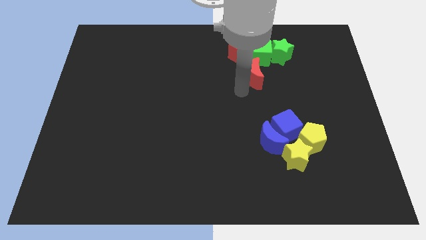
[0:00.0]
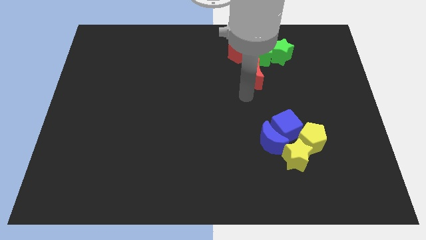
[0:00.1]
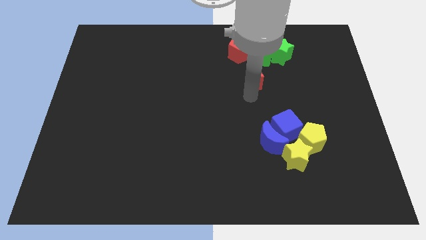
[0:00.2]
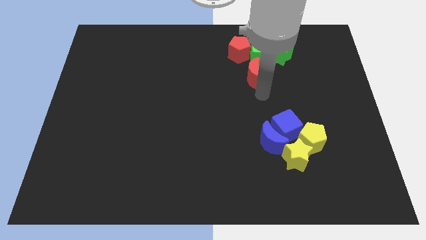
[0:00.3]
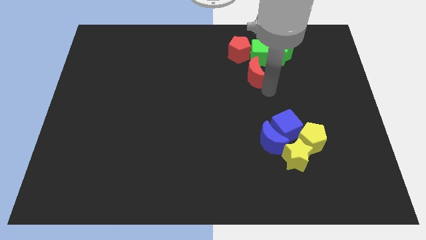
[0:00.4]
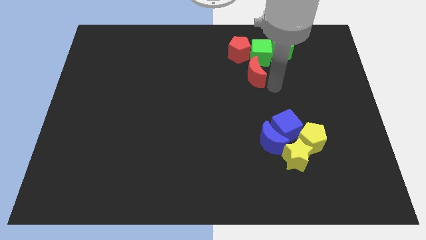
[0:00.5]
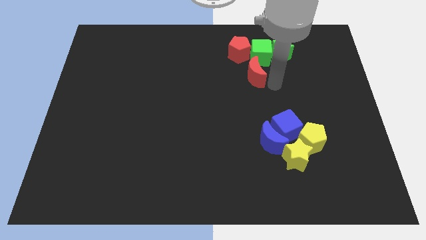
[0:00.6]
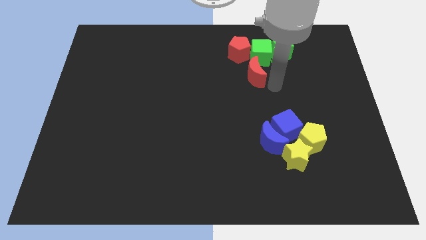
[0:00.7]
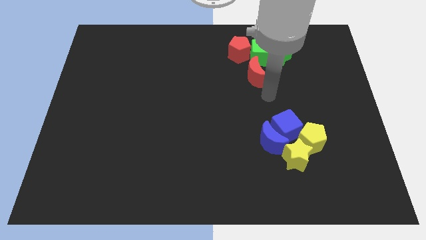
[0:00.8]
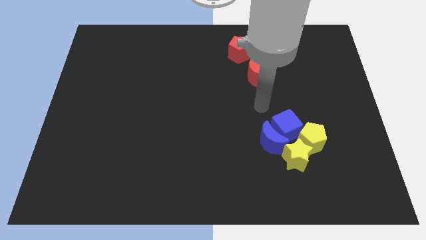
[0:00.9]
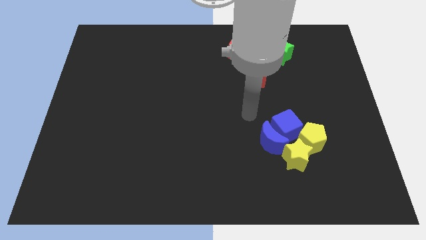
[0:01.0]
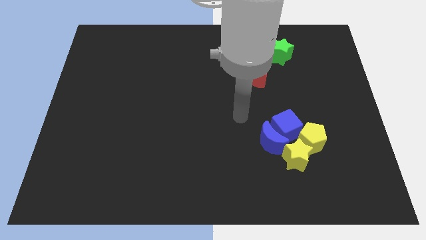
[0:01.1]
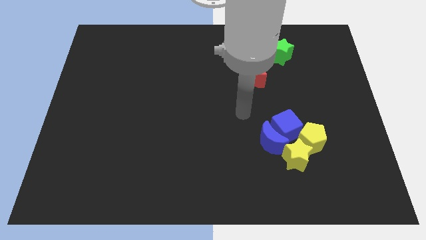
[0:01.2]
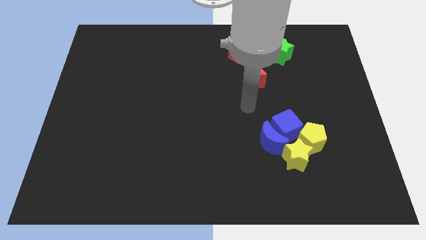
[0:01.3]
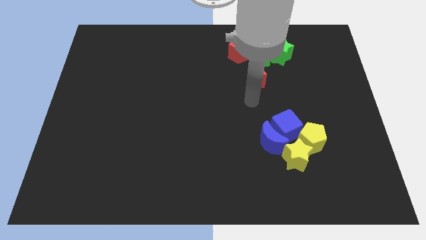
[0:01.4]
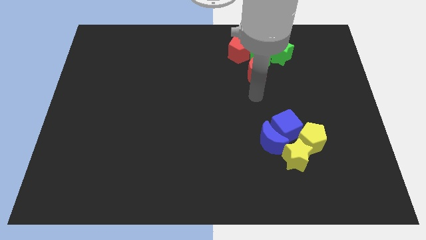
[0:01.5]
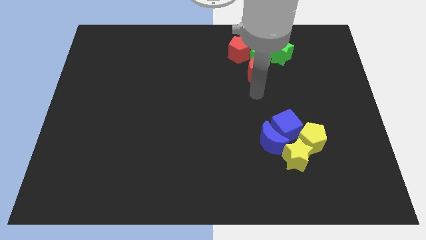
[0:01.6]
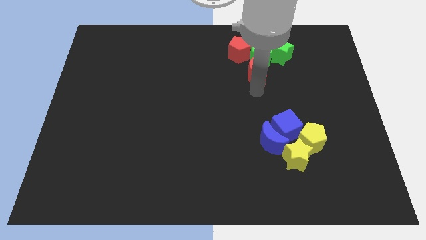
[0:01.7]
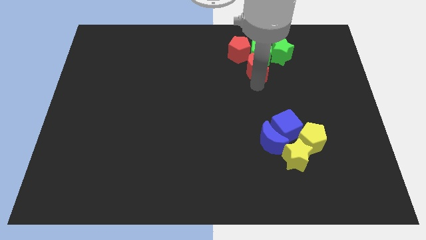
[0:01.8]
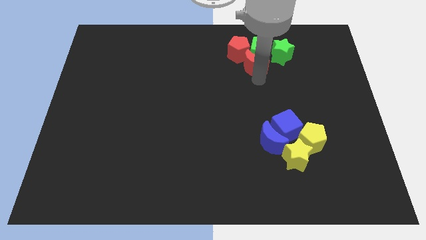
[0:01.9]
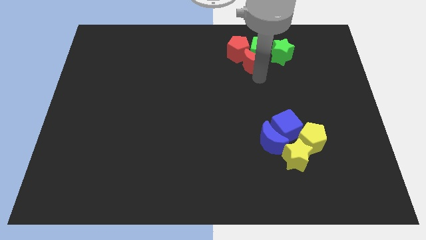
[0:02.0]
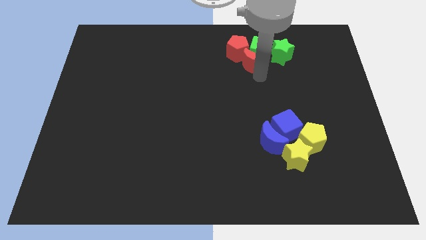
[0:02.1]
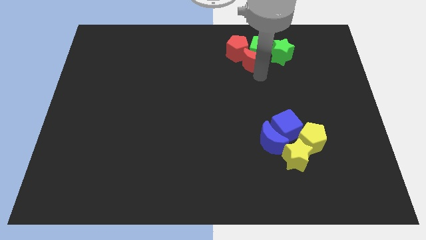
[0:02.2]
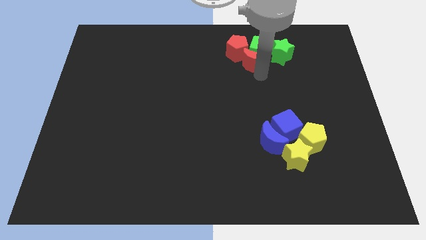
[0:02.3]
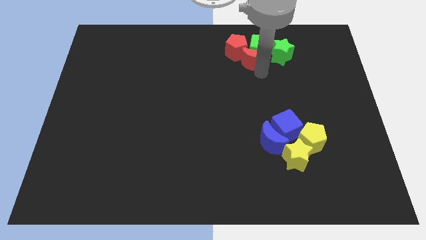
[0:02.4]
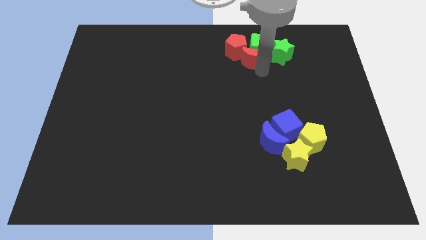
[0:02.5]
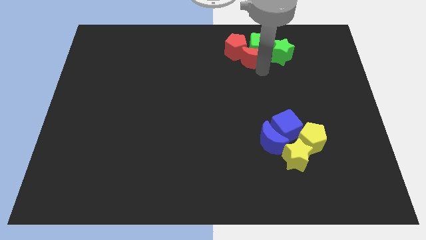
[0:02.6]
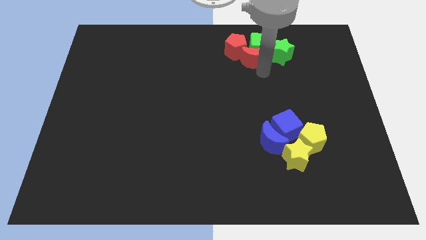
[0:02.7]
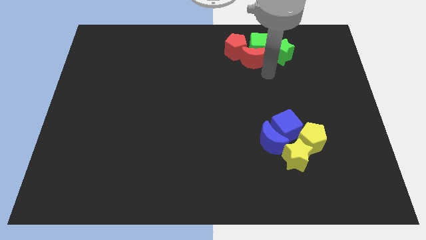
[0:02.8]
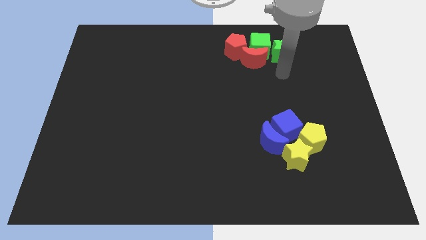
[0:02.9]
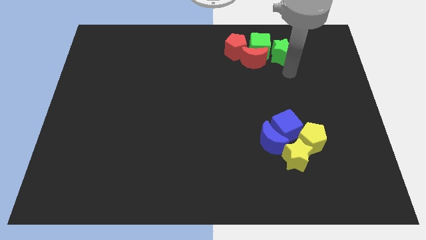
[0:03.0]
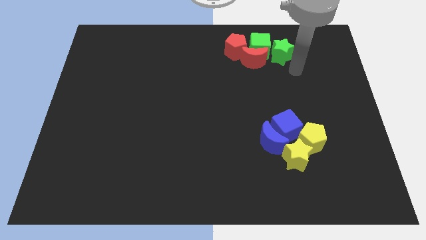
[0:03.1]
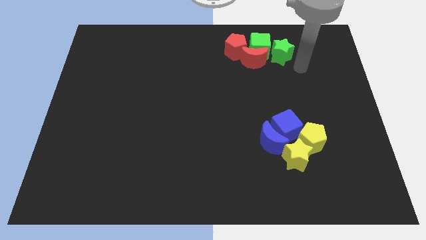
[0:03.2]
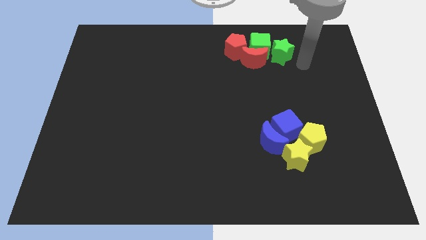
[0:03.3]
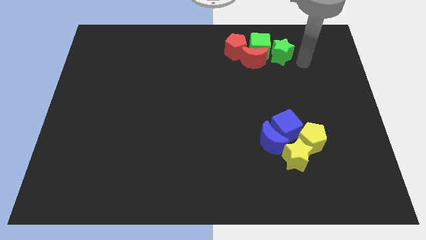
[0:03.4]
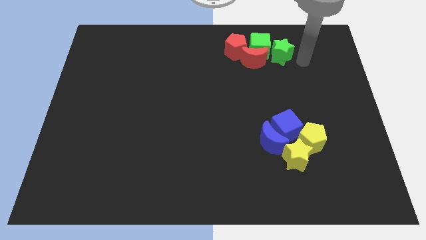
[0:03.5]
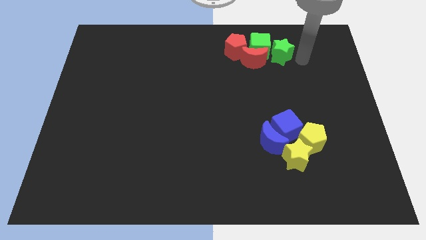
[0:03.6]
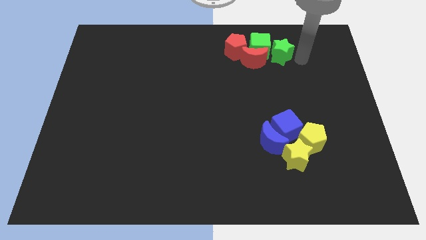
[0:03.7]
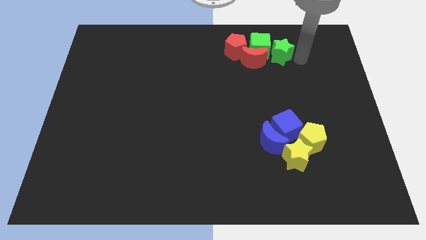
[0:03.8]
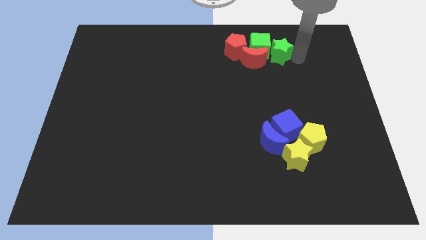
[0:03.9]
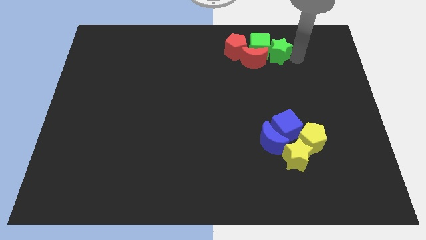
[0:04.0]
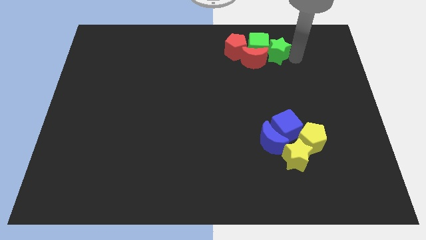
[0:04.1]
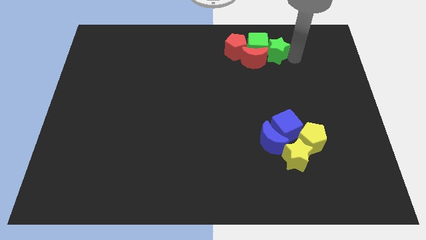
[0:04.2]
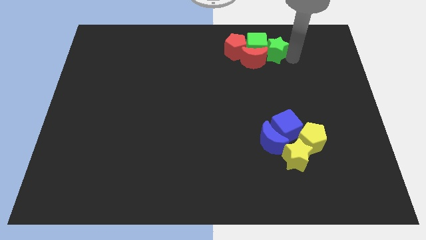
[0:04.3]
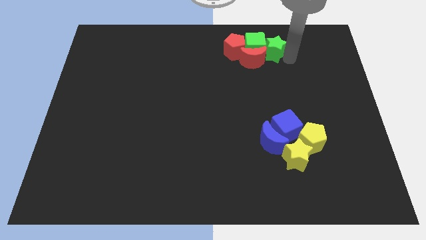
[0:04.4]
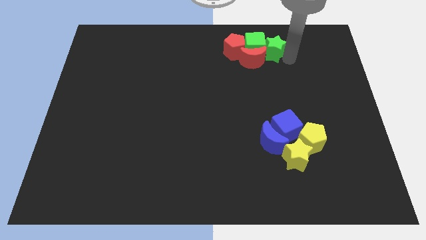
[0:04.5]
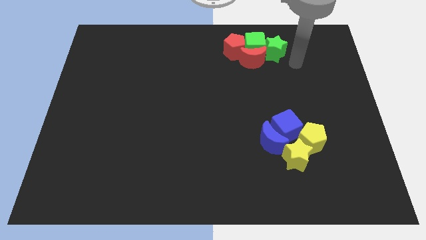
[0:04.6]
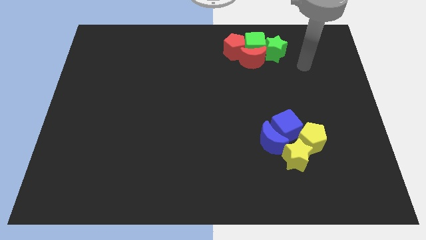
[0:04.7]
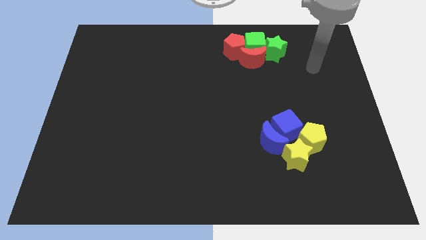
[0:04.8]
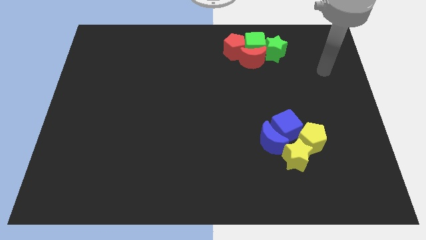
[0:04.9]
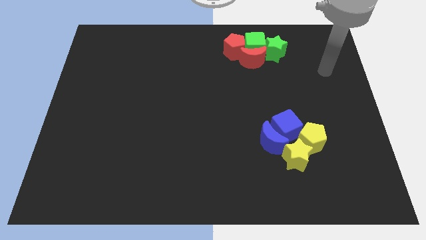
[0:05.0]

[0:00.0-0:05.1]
push the green star into the green cube

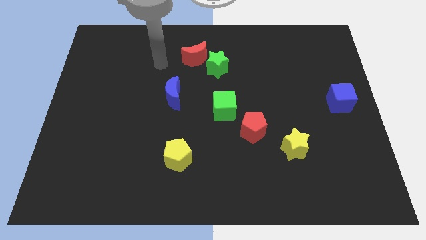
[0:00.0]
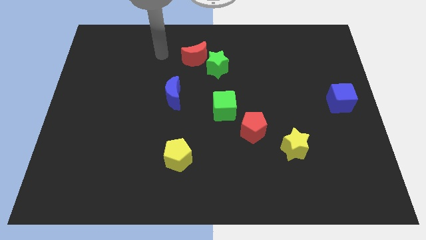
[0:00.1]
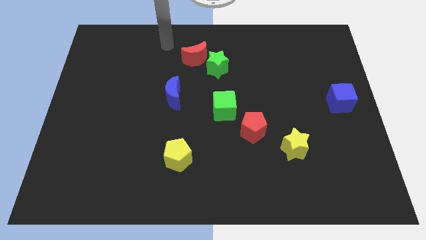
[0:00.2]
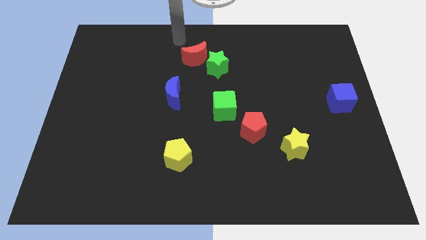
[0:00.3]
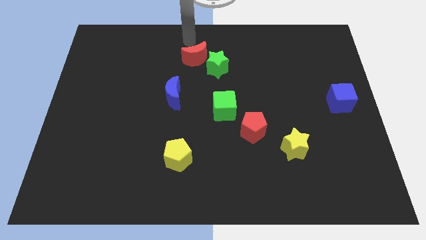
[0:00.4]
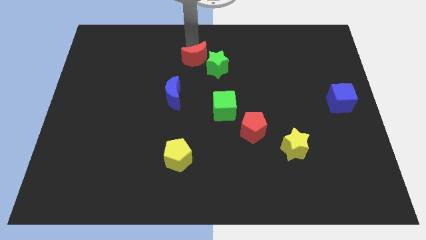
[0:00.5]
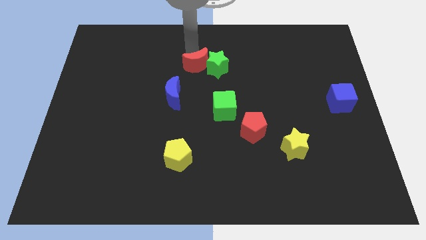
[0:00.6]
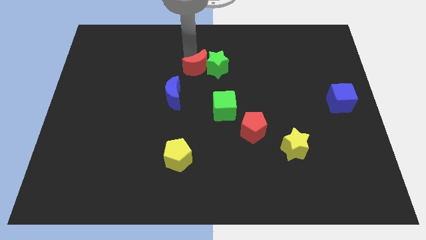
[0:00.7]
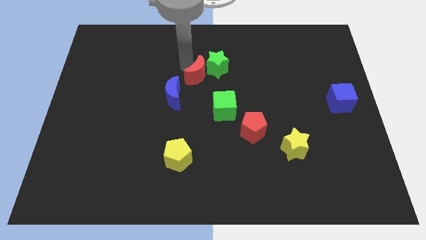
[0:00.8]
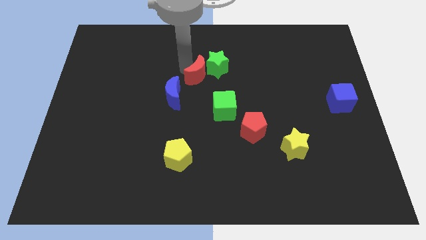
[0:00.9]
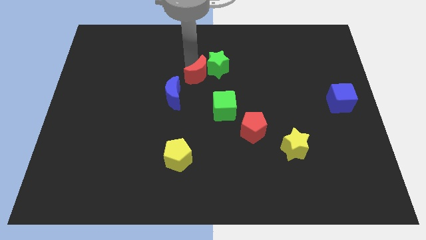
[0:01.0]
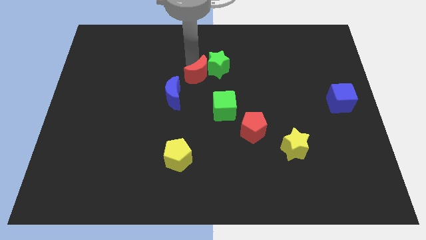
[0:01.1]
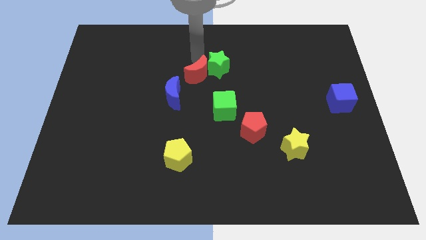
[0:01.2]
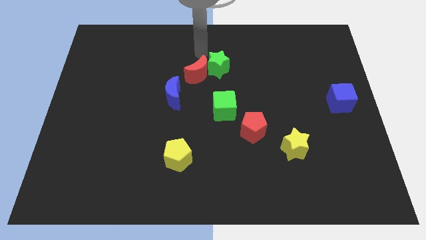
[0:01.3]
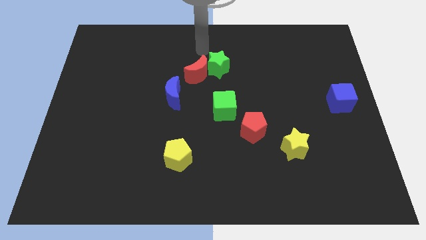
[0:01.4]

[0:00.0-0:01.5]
push the red crescent into the green star

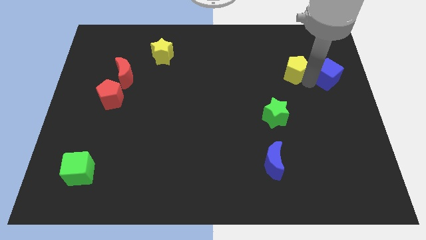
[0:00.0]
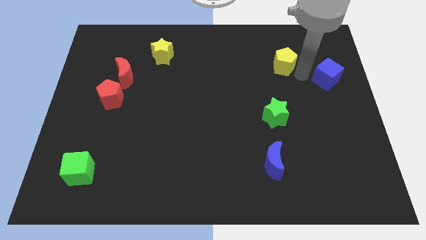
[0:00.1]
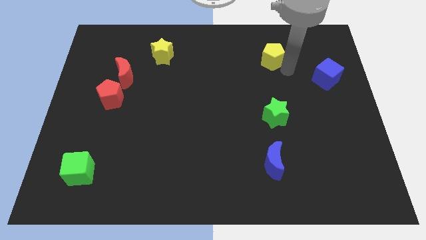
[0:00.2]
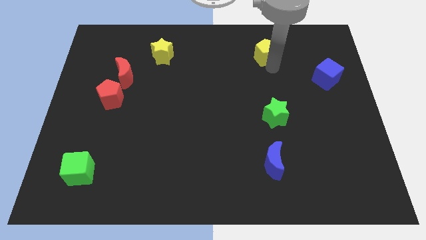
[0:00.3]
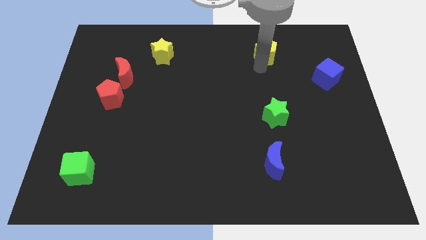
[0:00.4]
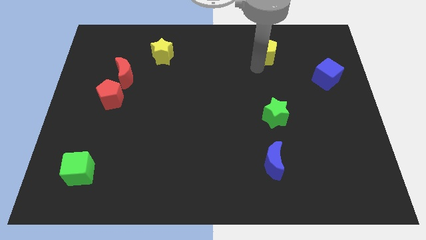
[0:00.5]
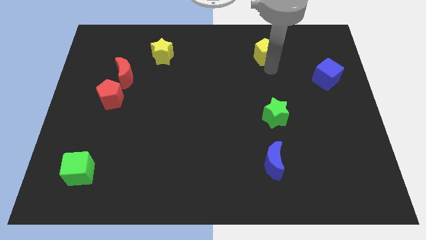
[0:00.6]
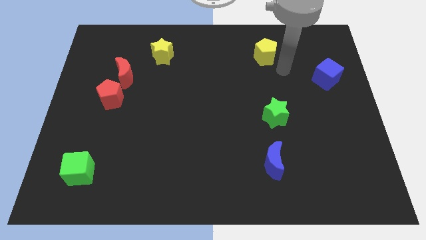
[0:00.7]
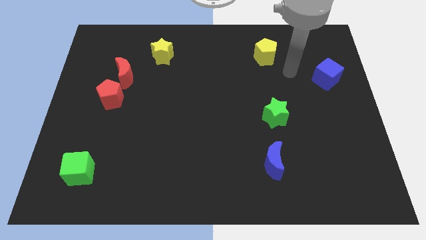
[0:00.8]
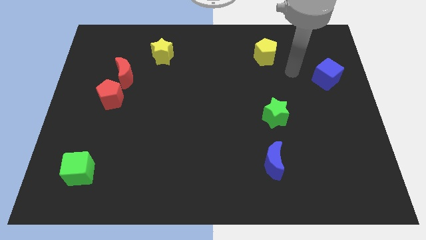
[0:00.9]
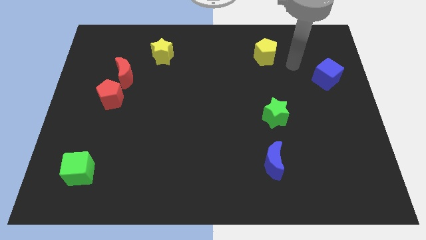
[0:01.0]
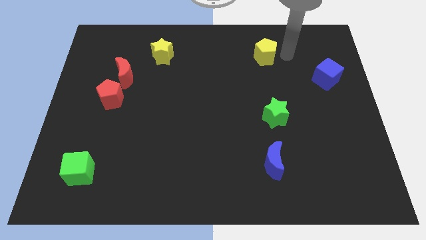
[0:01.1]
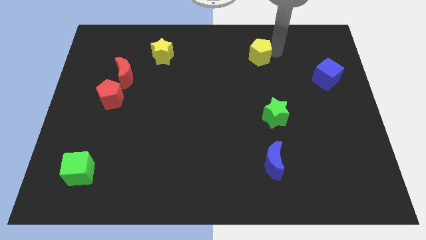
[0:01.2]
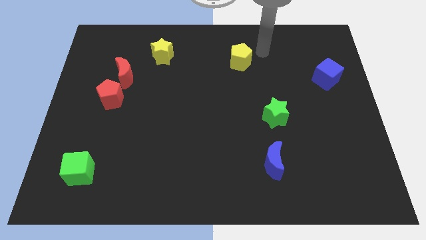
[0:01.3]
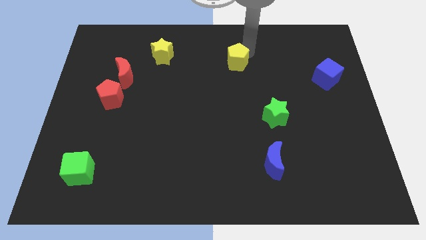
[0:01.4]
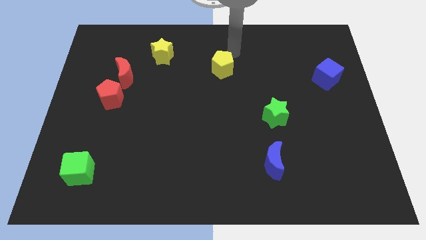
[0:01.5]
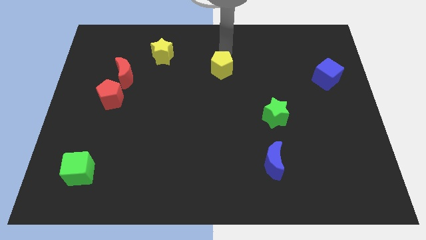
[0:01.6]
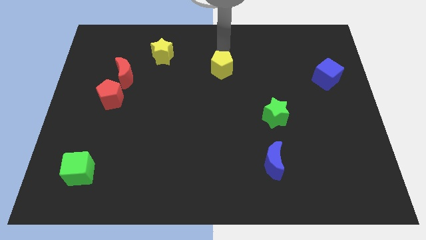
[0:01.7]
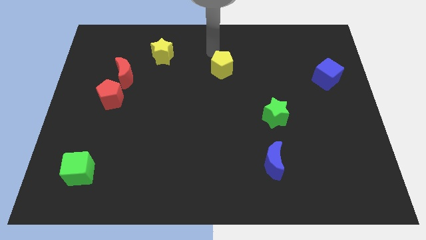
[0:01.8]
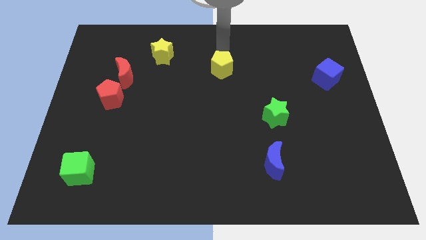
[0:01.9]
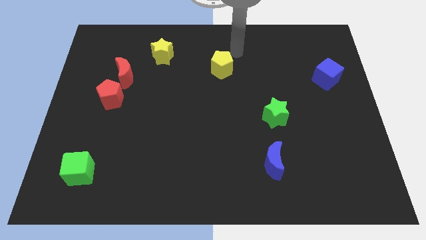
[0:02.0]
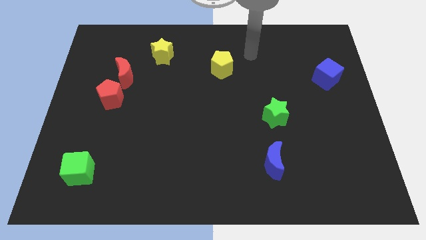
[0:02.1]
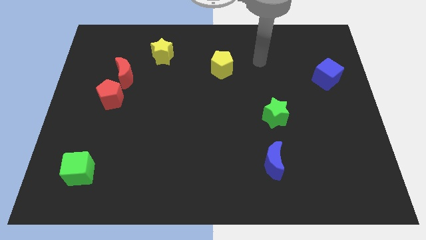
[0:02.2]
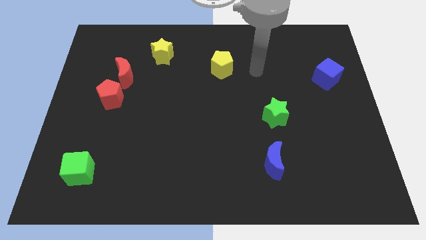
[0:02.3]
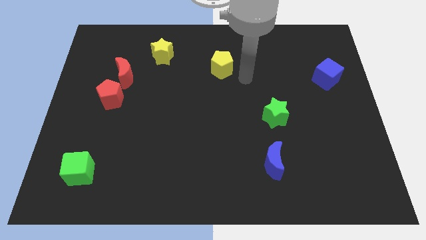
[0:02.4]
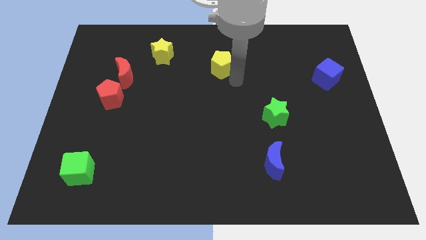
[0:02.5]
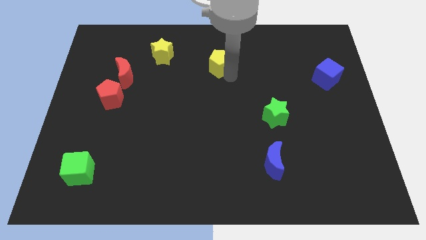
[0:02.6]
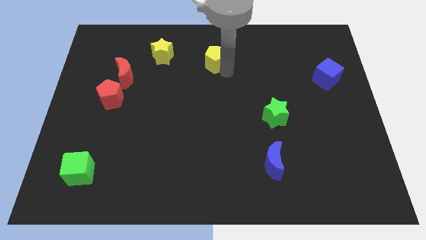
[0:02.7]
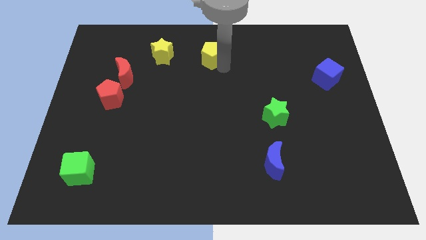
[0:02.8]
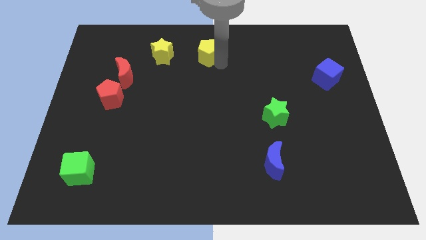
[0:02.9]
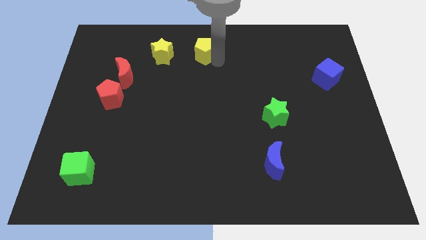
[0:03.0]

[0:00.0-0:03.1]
place yellow pentagon to the right of yellow star
